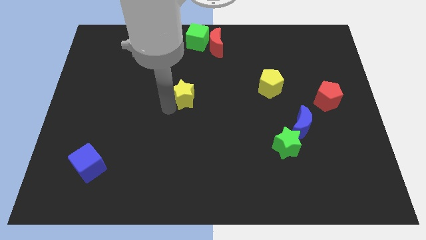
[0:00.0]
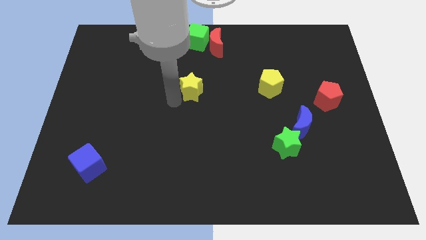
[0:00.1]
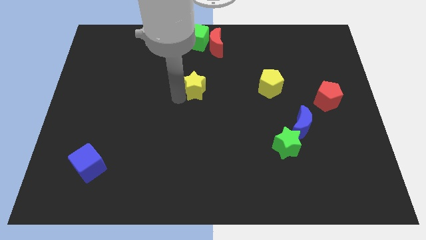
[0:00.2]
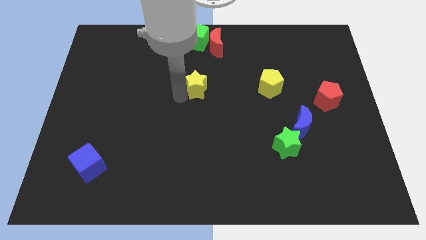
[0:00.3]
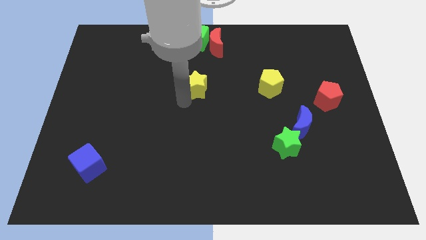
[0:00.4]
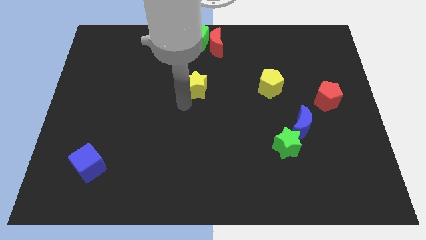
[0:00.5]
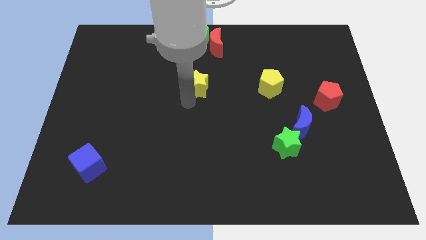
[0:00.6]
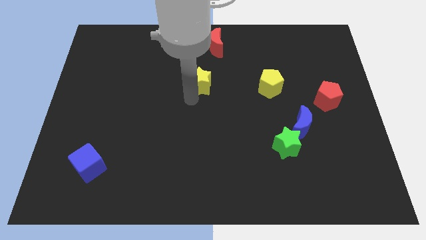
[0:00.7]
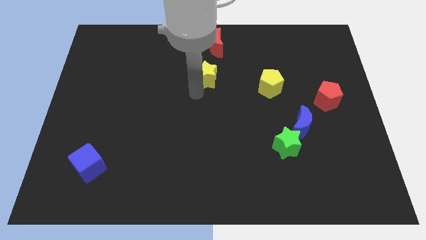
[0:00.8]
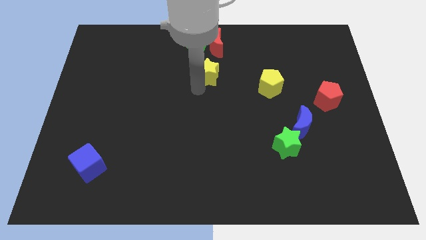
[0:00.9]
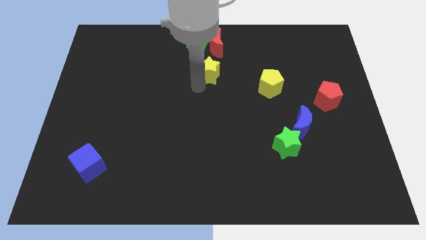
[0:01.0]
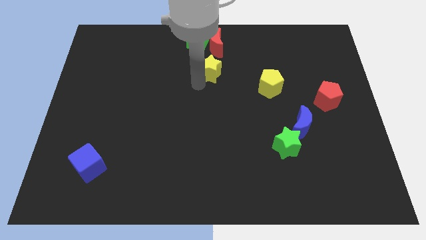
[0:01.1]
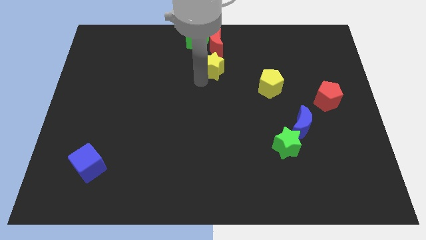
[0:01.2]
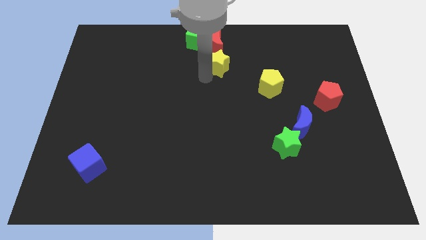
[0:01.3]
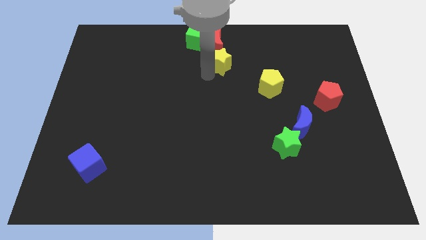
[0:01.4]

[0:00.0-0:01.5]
place yellow star to the bottom of red moon

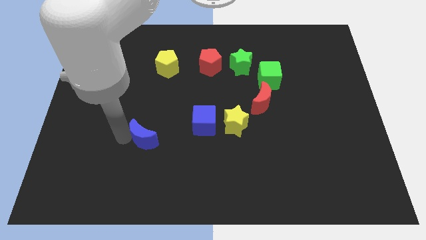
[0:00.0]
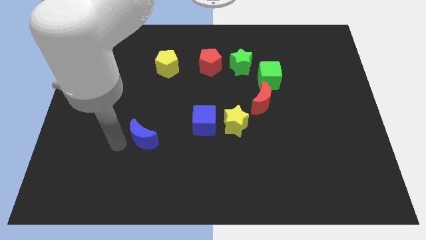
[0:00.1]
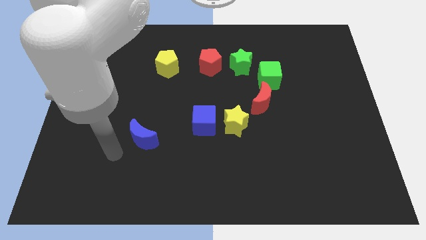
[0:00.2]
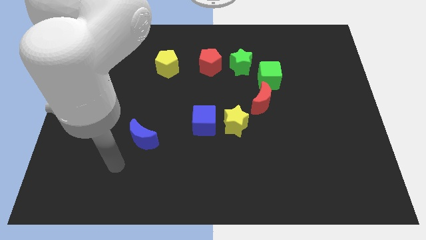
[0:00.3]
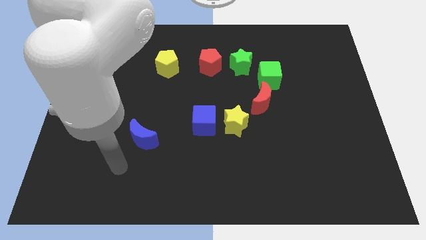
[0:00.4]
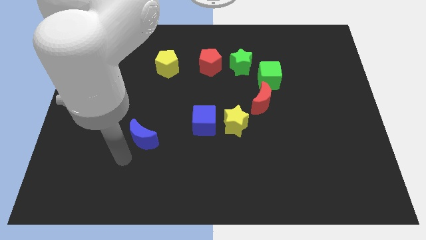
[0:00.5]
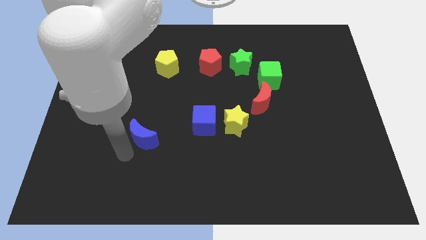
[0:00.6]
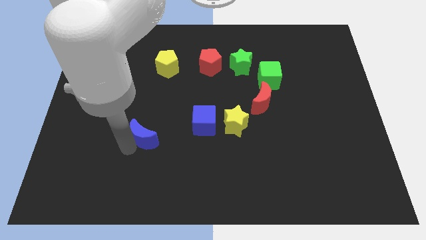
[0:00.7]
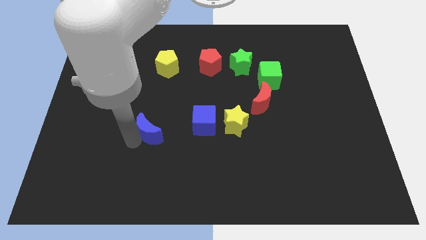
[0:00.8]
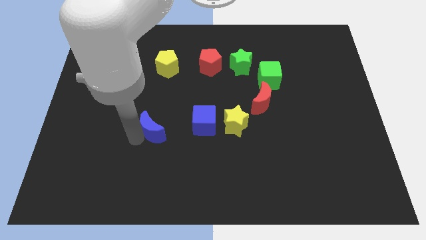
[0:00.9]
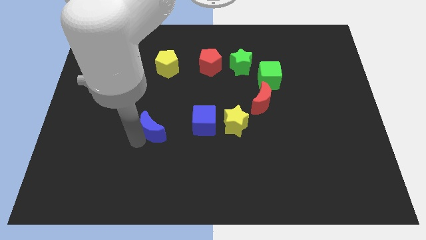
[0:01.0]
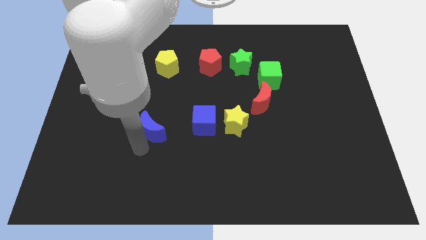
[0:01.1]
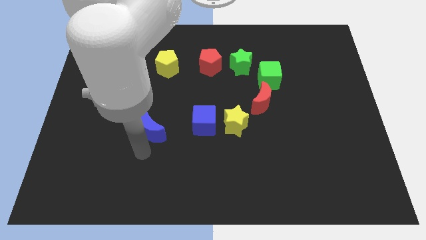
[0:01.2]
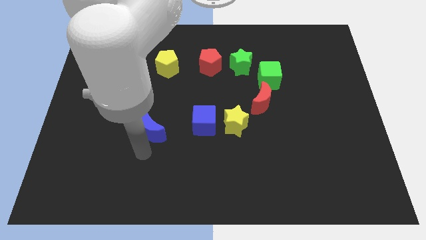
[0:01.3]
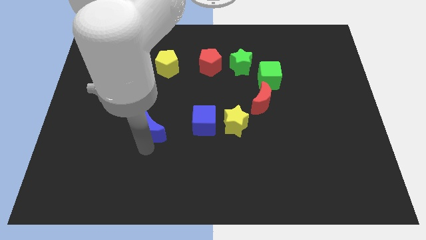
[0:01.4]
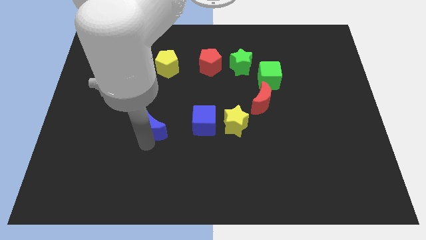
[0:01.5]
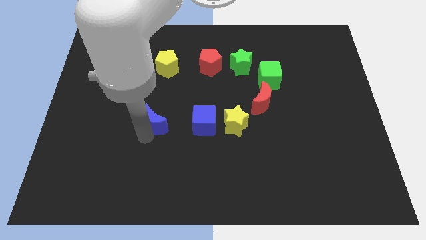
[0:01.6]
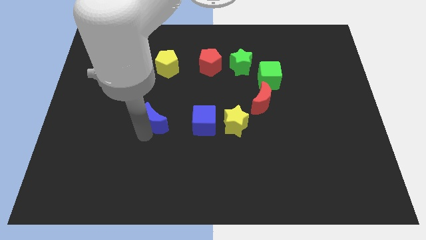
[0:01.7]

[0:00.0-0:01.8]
move the blue moon to the left of the blue cube

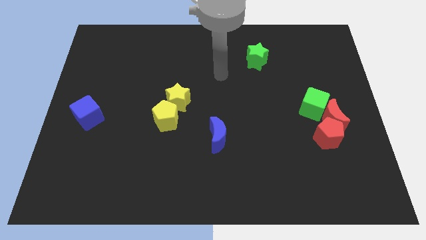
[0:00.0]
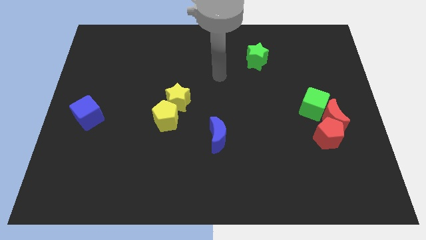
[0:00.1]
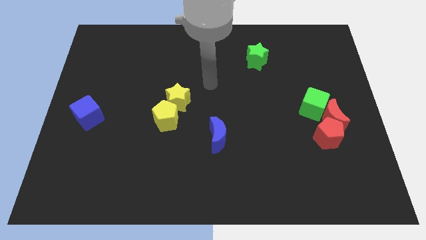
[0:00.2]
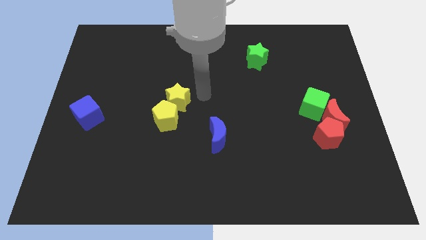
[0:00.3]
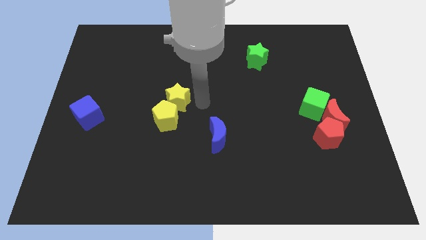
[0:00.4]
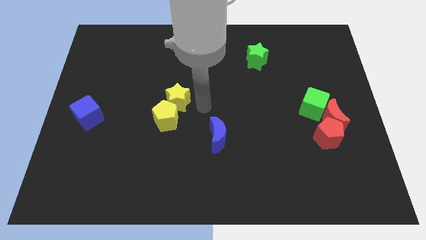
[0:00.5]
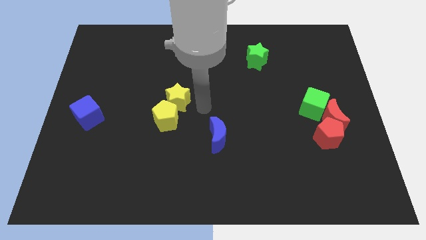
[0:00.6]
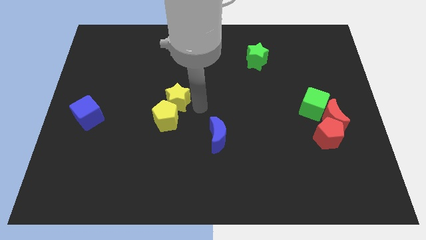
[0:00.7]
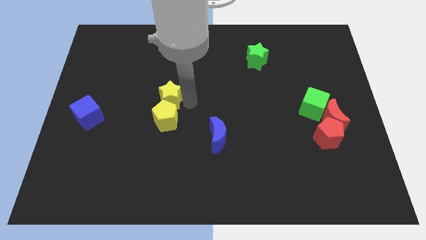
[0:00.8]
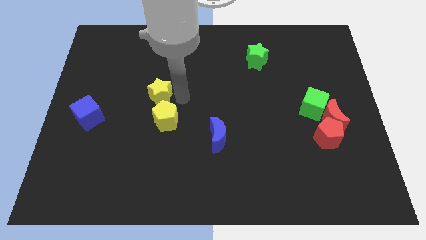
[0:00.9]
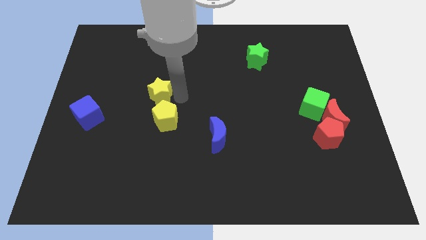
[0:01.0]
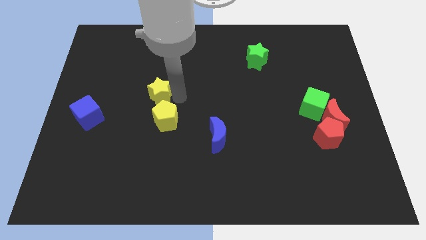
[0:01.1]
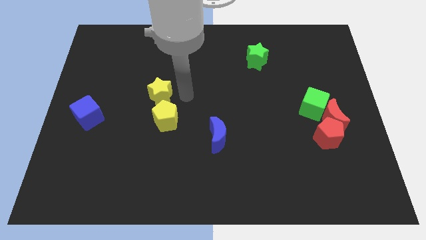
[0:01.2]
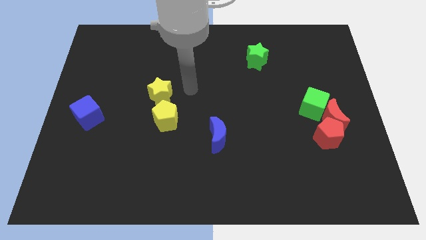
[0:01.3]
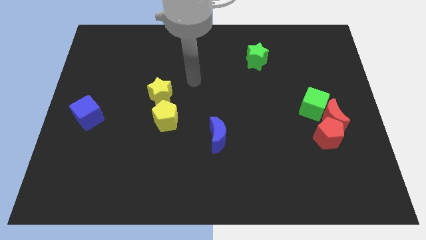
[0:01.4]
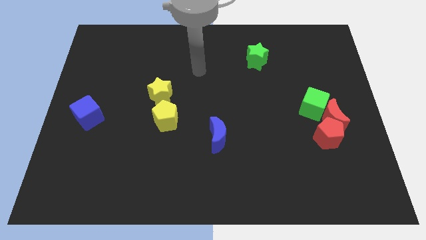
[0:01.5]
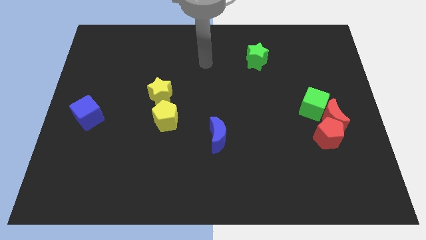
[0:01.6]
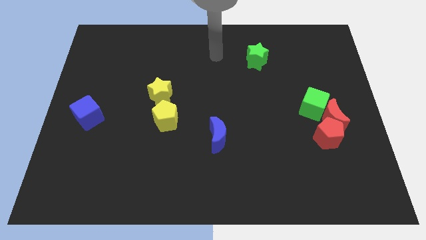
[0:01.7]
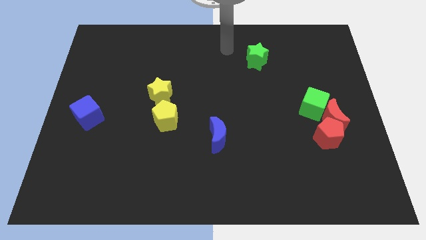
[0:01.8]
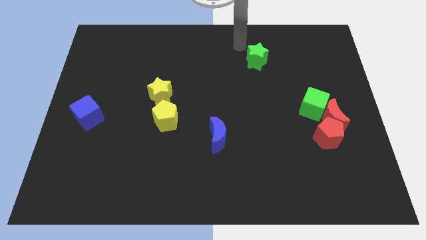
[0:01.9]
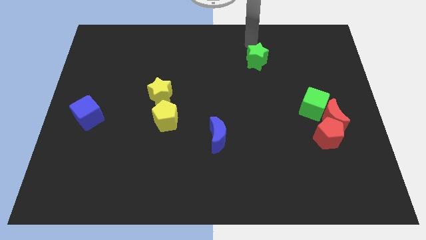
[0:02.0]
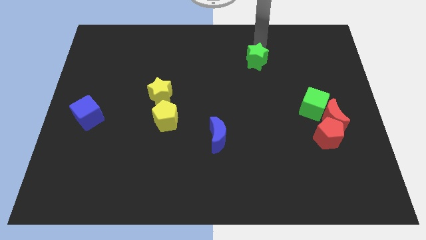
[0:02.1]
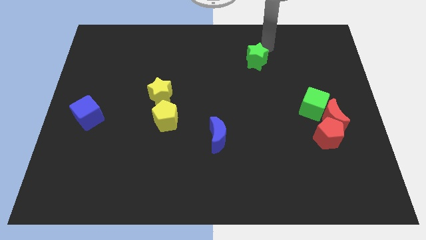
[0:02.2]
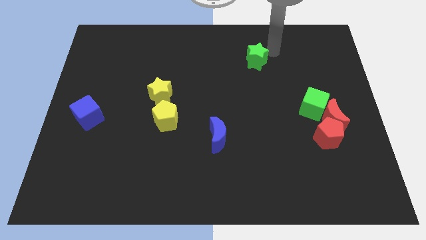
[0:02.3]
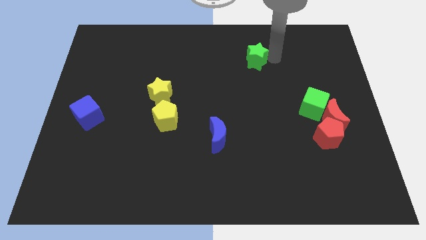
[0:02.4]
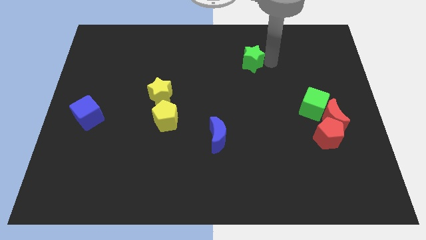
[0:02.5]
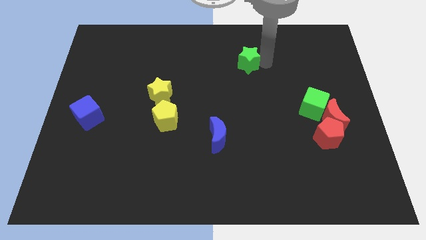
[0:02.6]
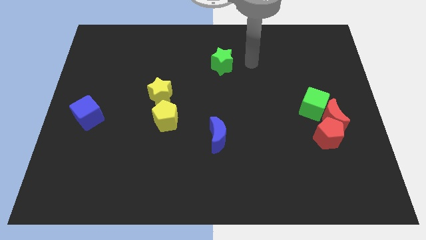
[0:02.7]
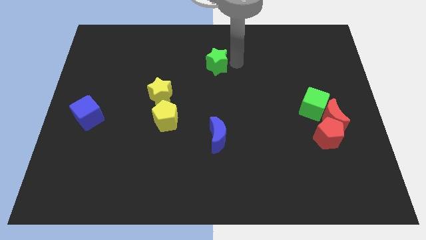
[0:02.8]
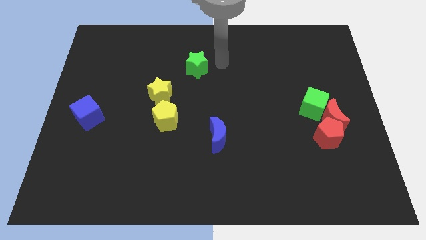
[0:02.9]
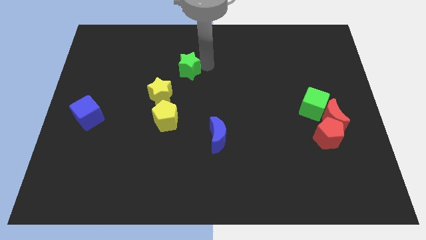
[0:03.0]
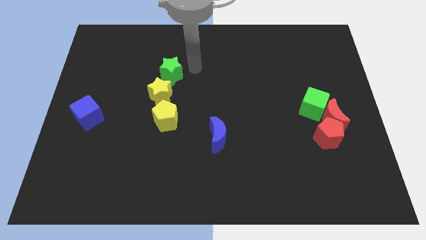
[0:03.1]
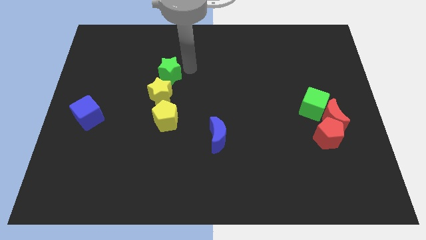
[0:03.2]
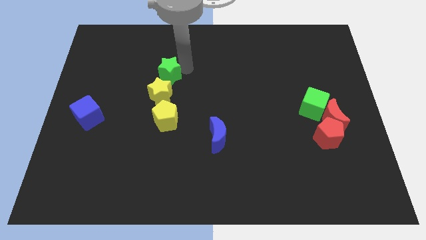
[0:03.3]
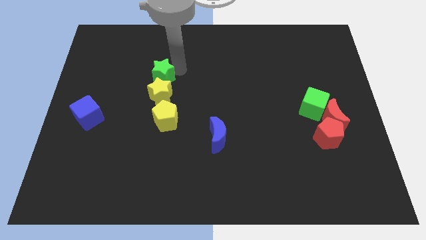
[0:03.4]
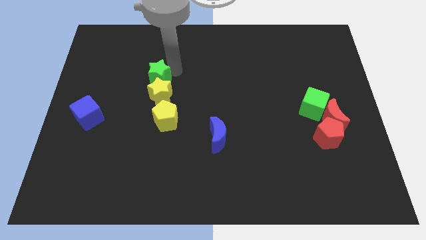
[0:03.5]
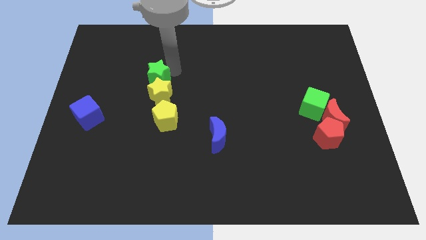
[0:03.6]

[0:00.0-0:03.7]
place the green star above the yellow star

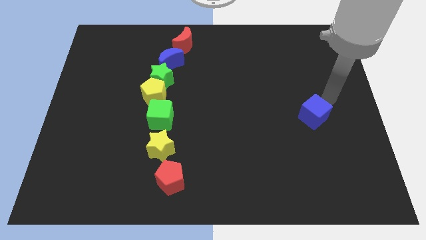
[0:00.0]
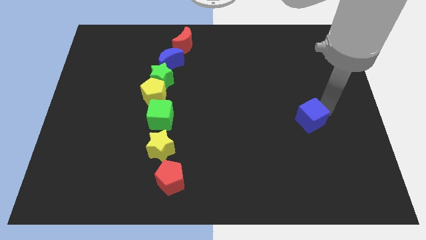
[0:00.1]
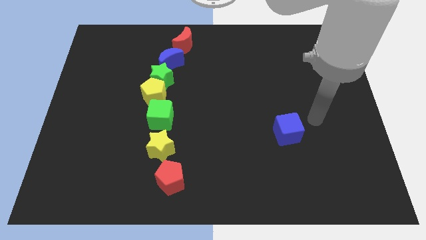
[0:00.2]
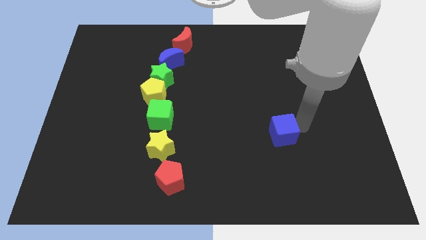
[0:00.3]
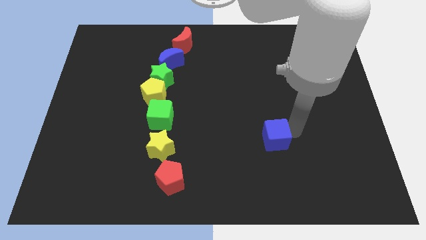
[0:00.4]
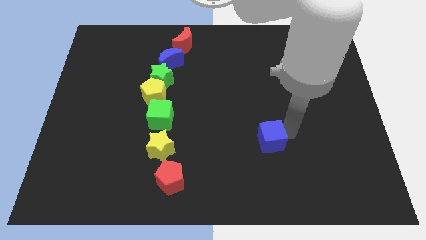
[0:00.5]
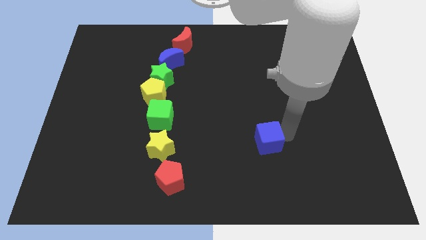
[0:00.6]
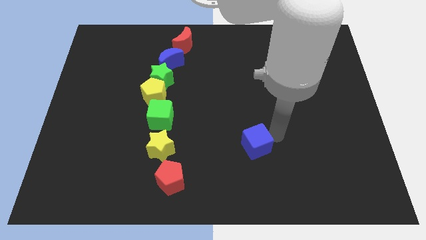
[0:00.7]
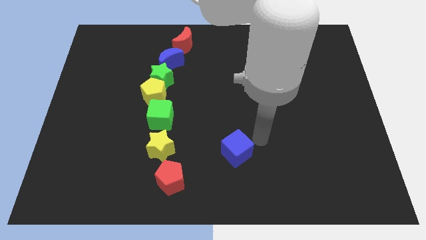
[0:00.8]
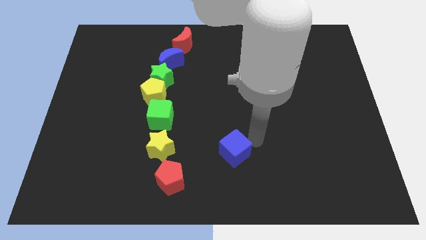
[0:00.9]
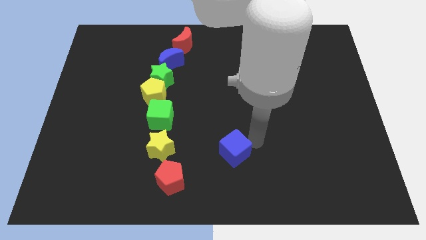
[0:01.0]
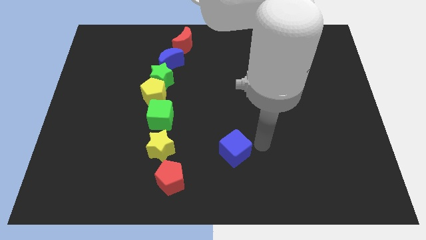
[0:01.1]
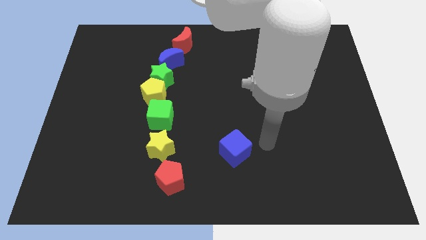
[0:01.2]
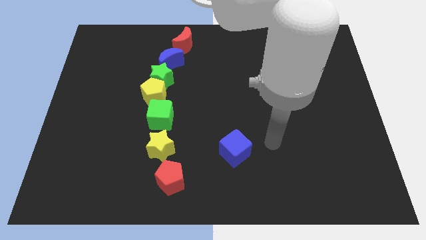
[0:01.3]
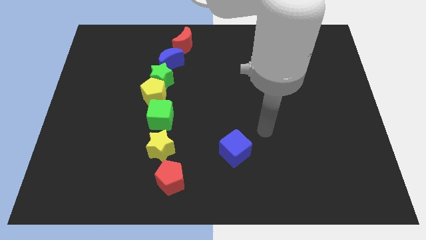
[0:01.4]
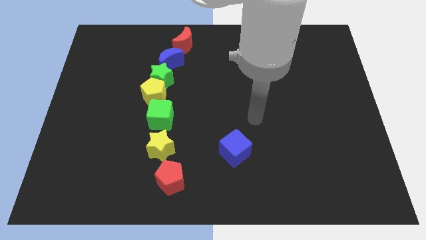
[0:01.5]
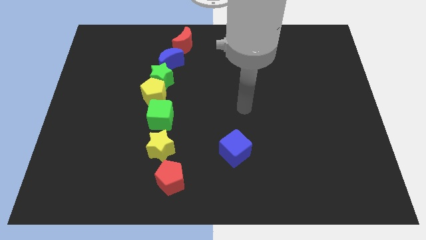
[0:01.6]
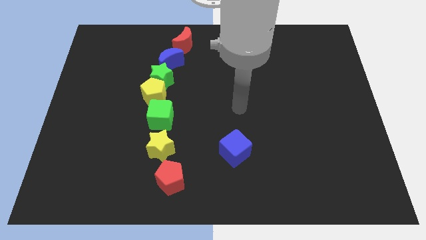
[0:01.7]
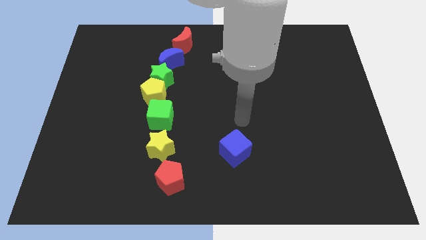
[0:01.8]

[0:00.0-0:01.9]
move the blue cube to towards the center bottom

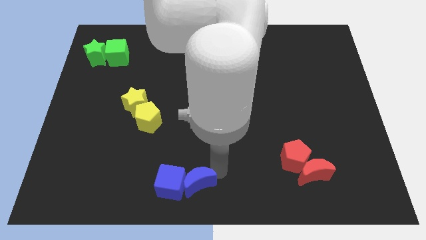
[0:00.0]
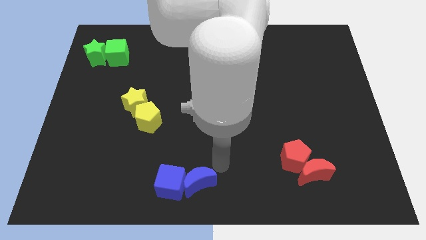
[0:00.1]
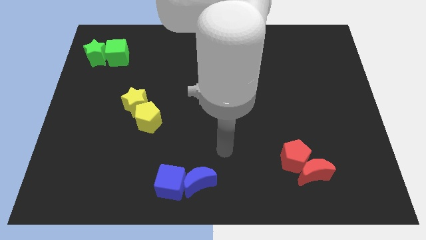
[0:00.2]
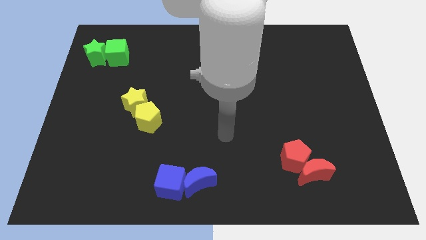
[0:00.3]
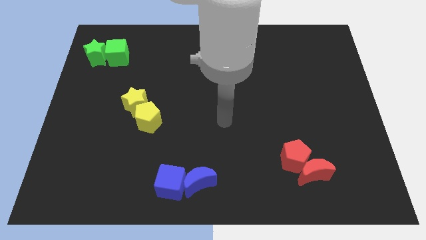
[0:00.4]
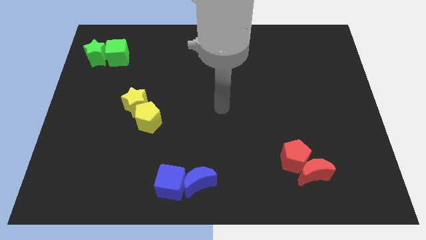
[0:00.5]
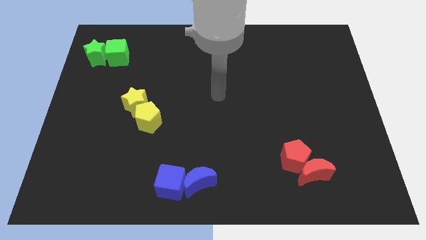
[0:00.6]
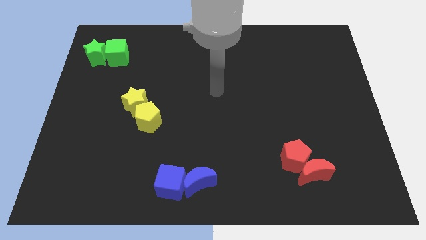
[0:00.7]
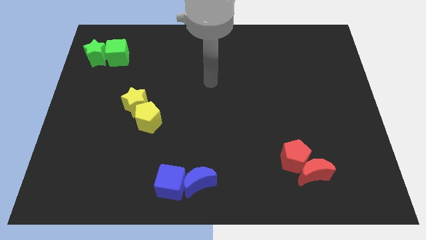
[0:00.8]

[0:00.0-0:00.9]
move your arm to the center of the board
